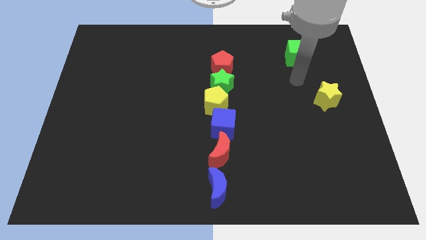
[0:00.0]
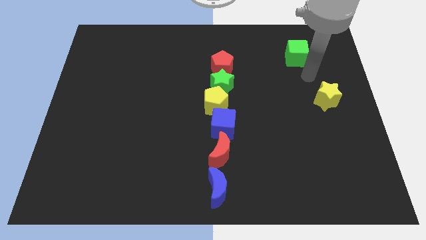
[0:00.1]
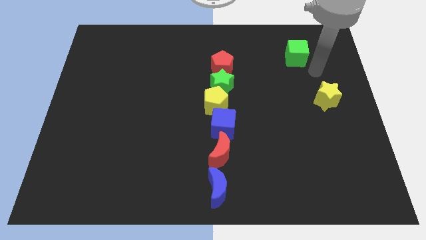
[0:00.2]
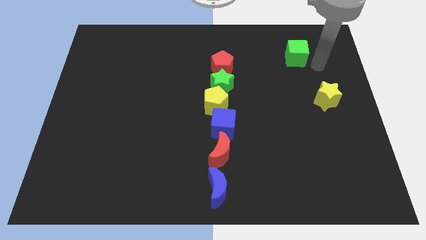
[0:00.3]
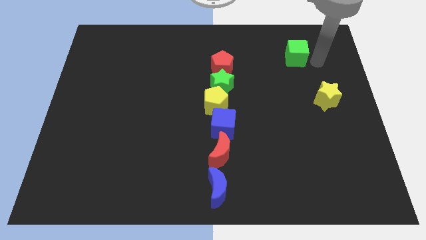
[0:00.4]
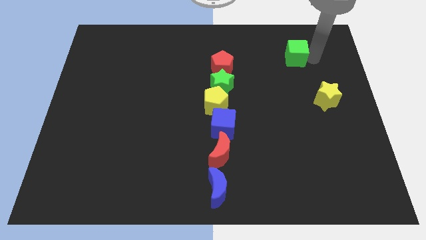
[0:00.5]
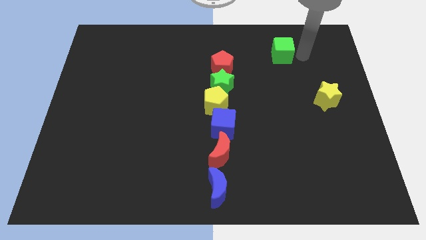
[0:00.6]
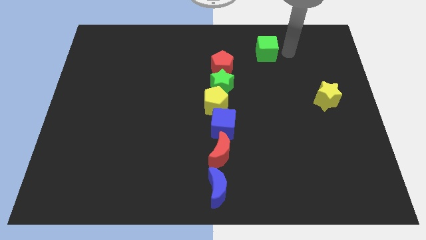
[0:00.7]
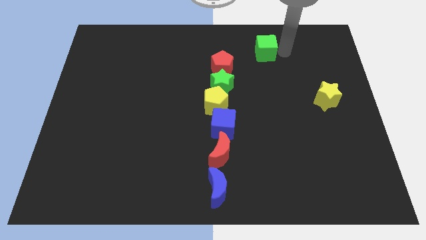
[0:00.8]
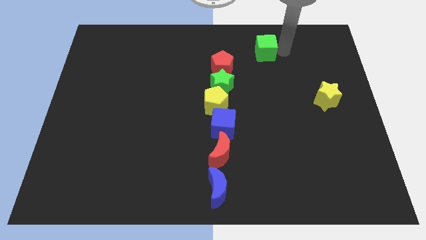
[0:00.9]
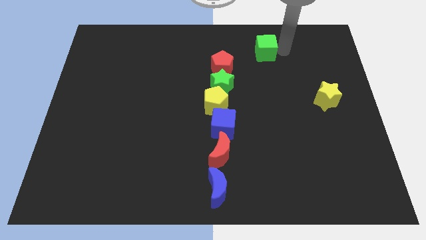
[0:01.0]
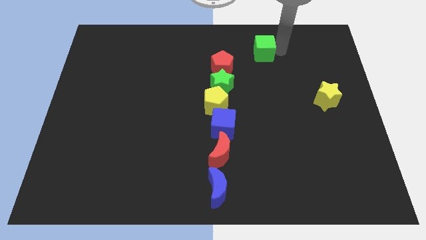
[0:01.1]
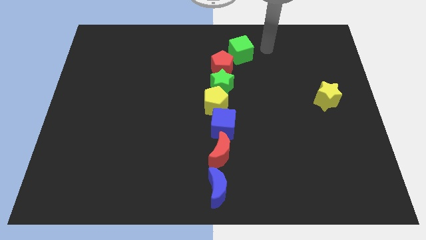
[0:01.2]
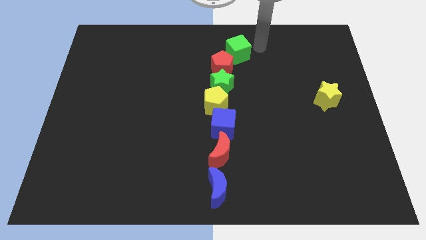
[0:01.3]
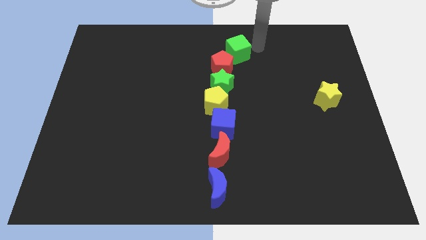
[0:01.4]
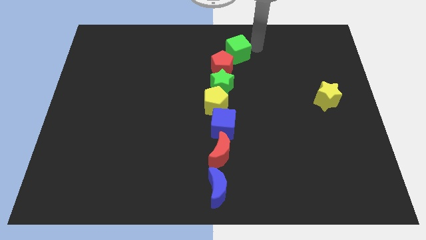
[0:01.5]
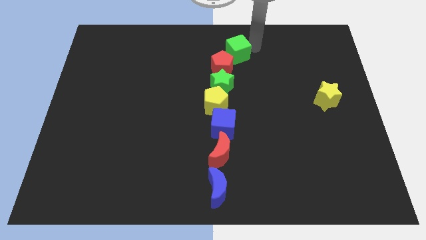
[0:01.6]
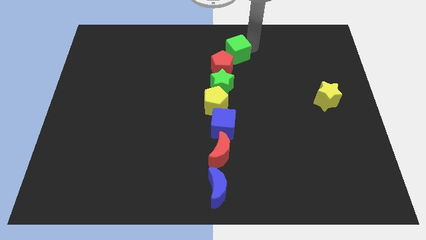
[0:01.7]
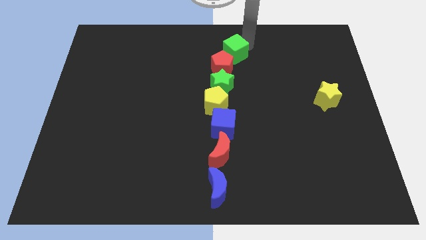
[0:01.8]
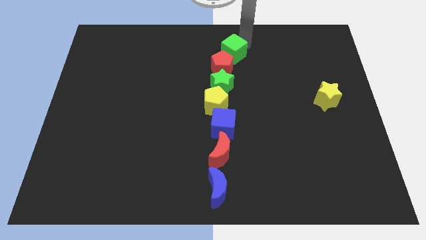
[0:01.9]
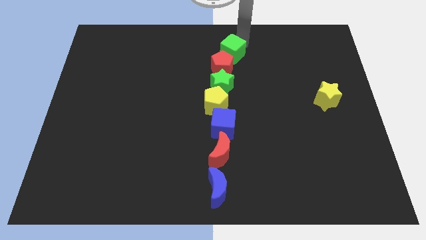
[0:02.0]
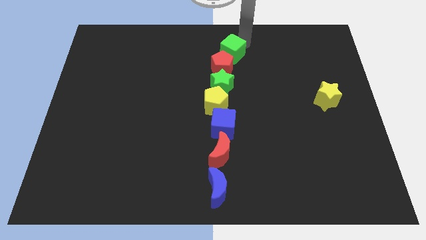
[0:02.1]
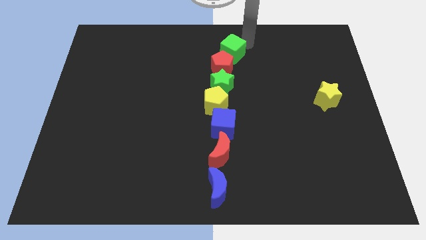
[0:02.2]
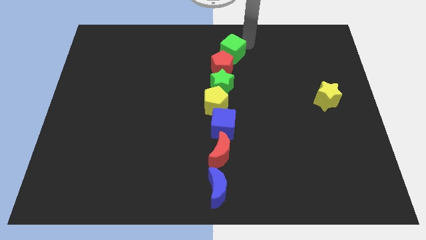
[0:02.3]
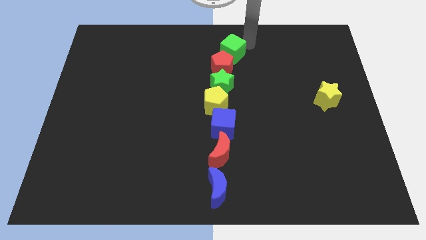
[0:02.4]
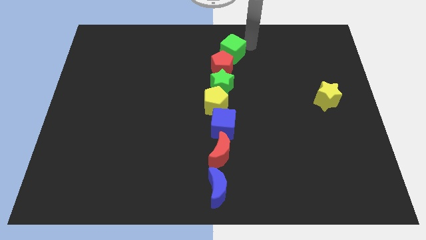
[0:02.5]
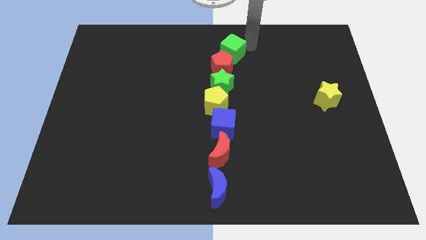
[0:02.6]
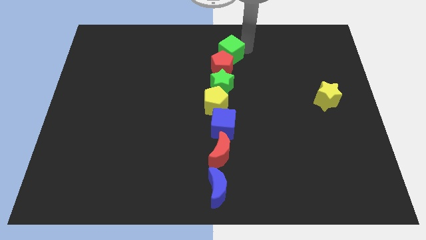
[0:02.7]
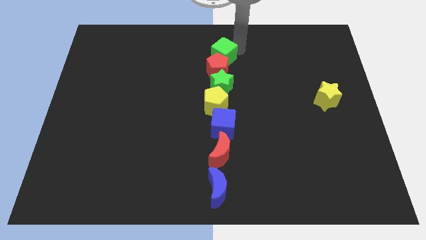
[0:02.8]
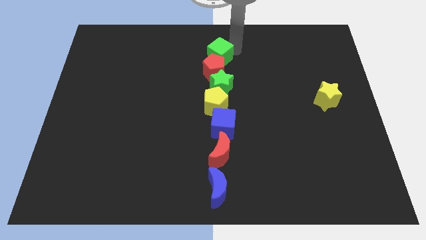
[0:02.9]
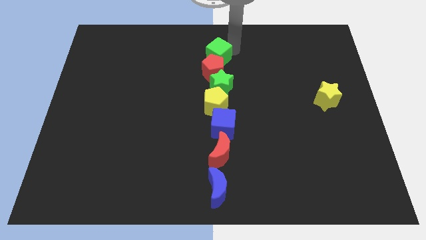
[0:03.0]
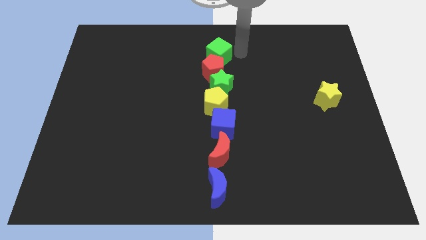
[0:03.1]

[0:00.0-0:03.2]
place the green cube at the top of red pentagon

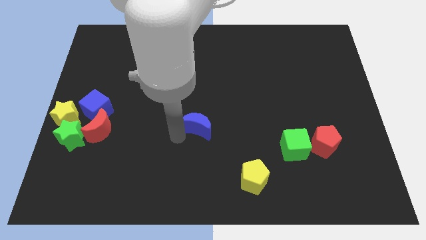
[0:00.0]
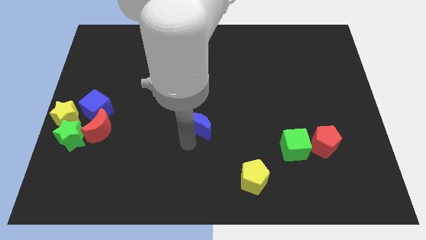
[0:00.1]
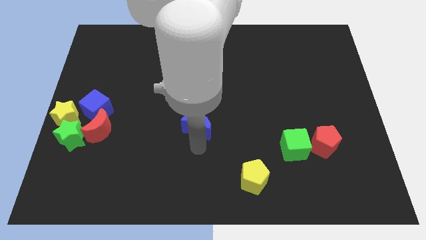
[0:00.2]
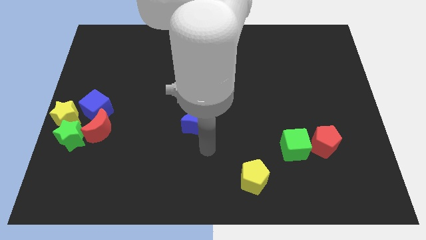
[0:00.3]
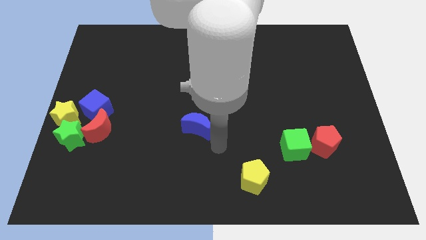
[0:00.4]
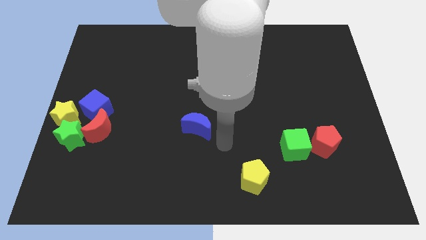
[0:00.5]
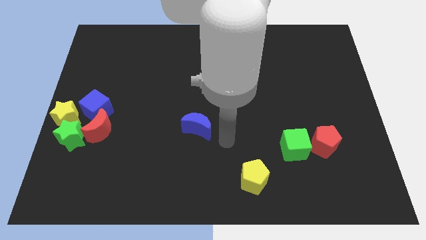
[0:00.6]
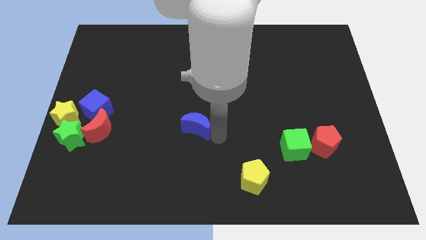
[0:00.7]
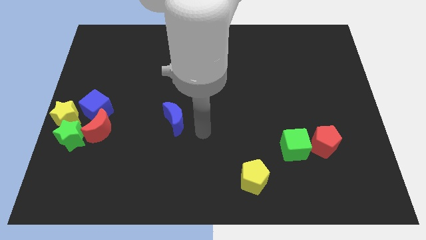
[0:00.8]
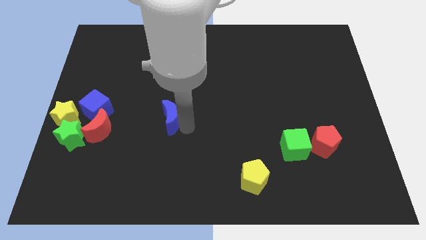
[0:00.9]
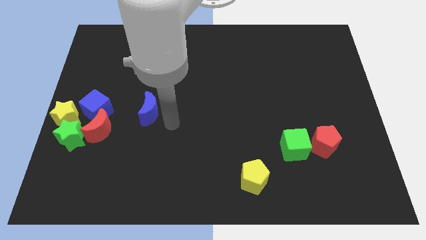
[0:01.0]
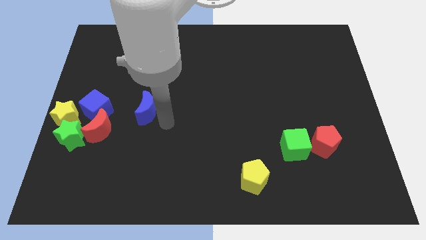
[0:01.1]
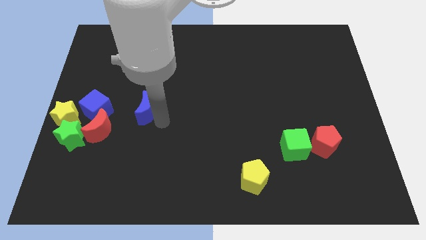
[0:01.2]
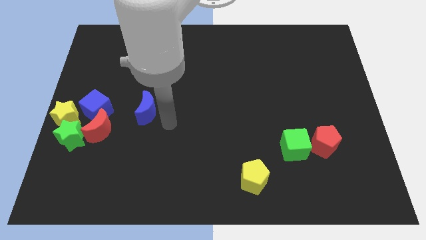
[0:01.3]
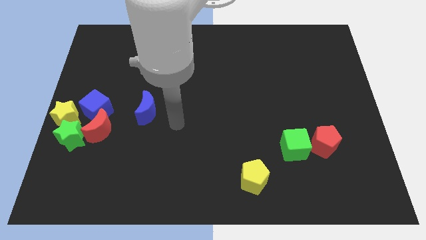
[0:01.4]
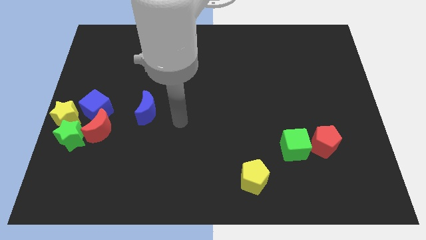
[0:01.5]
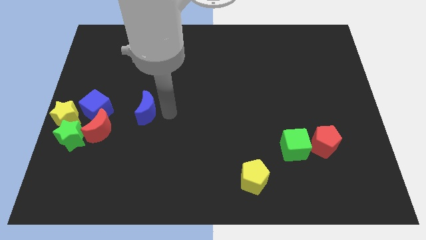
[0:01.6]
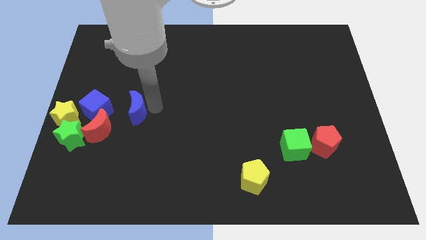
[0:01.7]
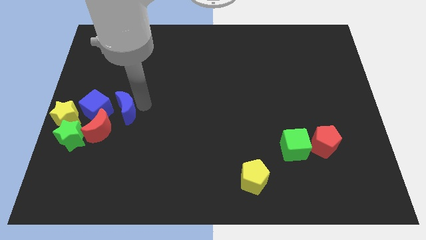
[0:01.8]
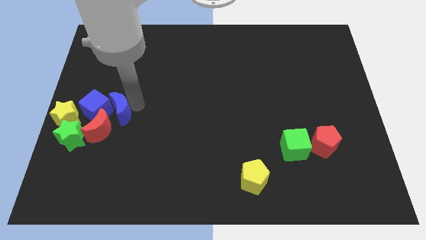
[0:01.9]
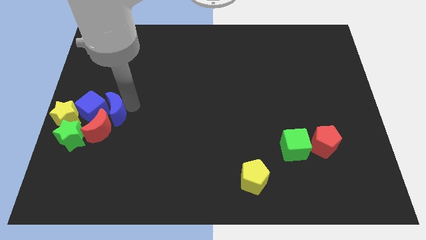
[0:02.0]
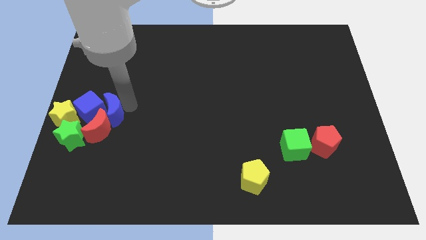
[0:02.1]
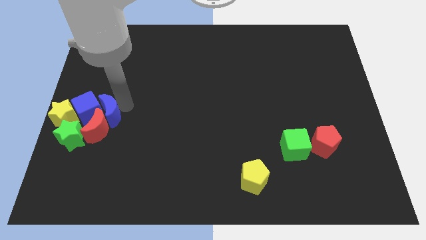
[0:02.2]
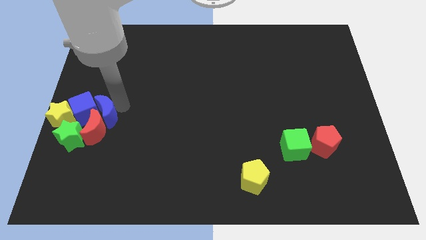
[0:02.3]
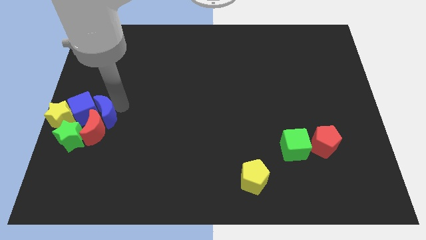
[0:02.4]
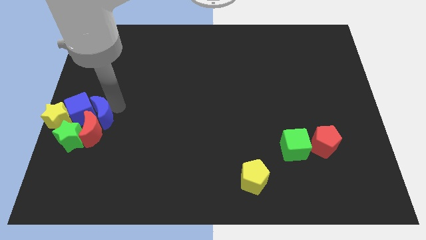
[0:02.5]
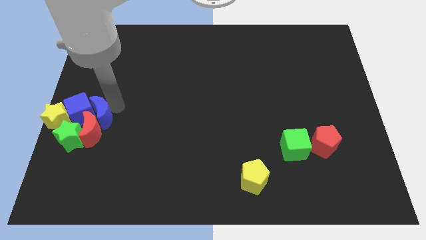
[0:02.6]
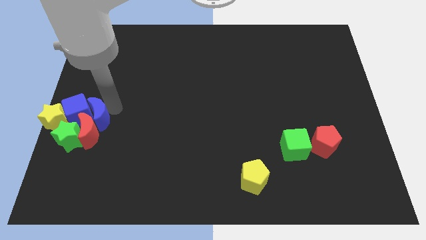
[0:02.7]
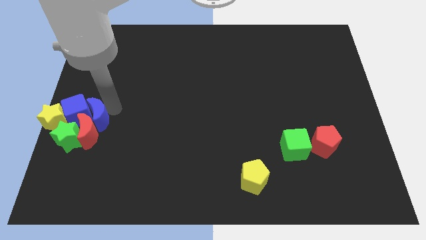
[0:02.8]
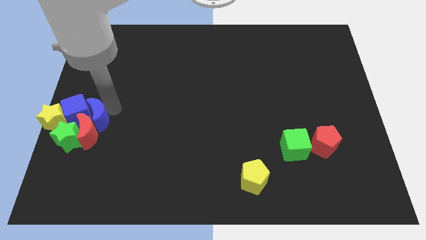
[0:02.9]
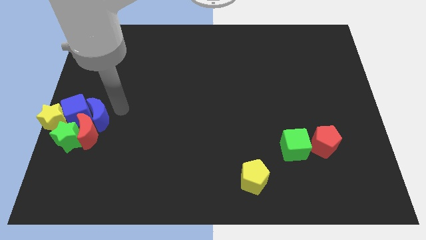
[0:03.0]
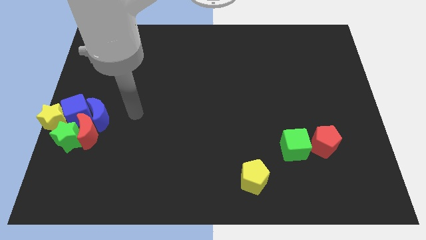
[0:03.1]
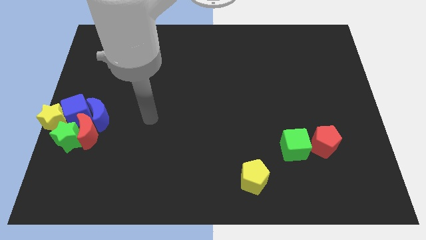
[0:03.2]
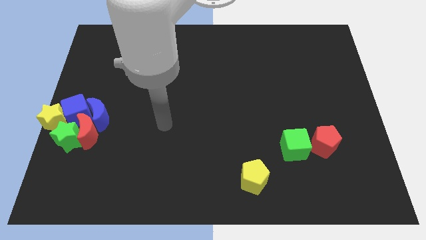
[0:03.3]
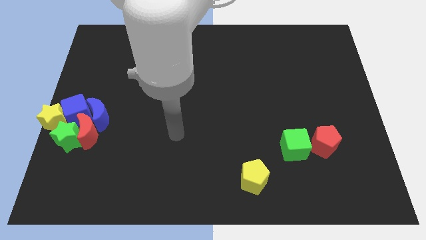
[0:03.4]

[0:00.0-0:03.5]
push blue moon in to blue cube

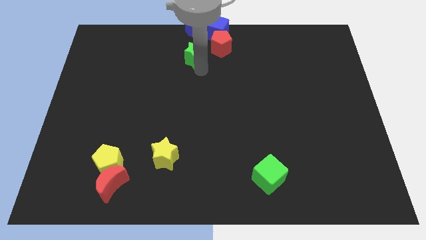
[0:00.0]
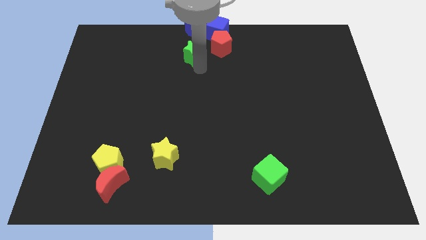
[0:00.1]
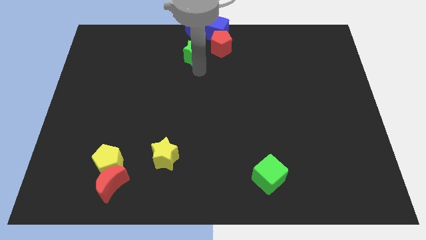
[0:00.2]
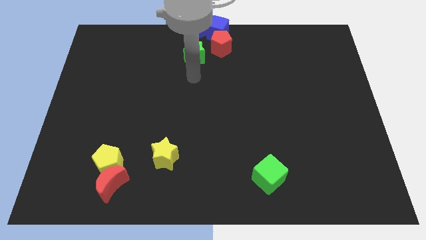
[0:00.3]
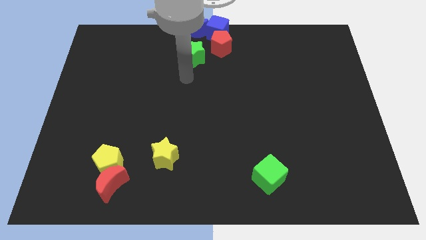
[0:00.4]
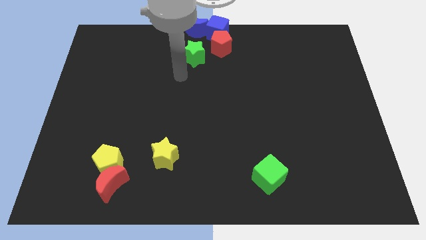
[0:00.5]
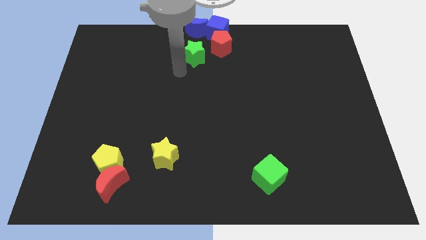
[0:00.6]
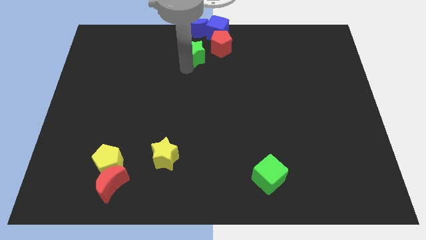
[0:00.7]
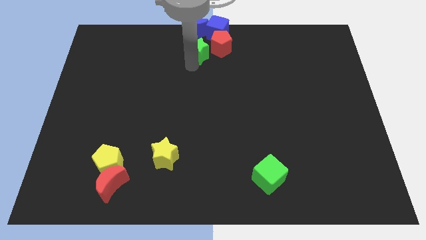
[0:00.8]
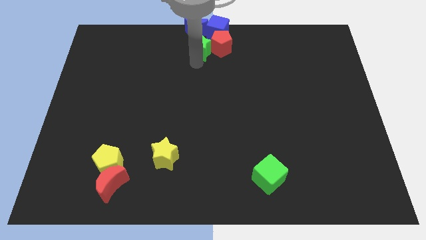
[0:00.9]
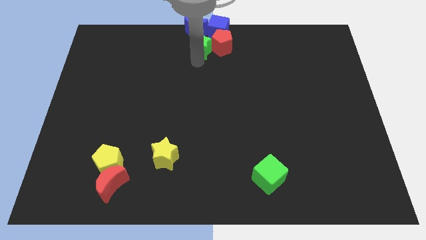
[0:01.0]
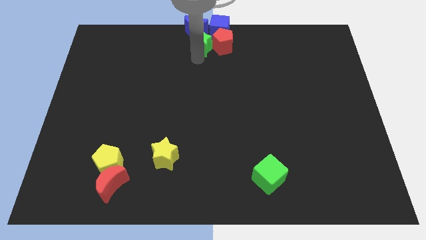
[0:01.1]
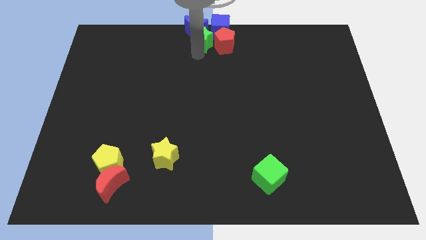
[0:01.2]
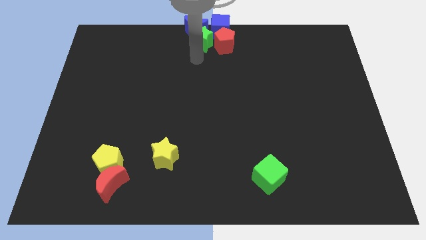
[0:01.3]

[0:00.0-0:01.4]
put the green star left to the red pentagon

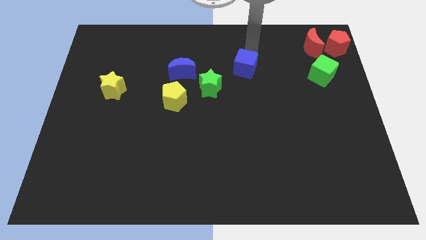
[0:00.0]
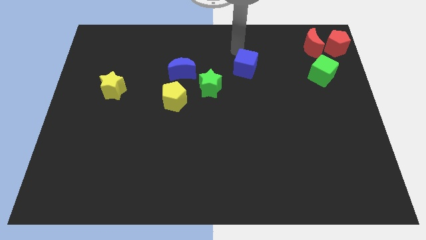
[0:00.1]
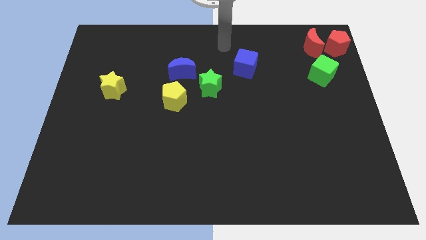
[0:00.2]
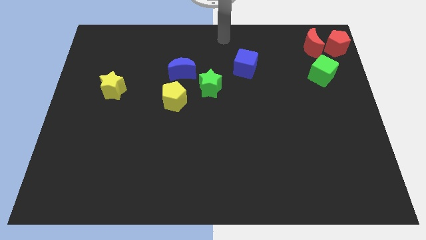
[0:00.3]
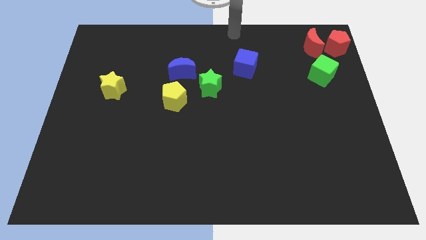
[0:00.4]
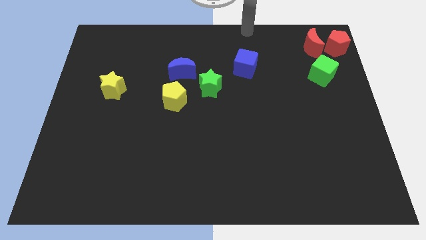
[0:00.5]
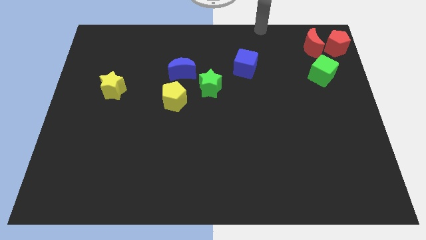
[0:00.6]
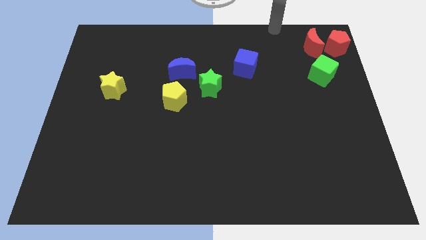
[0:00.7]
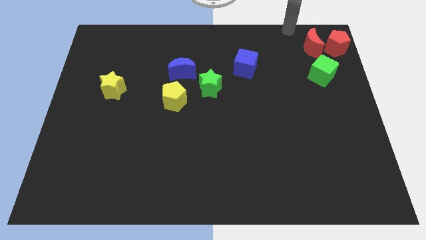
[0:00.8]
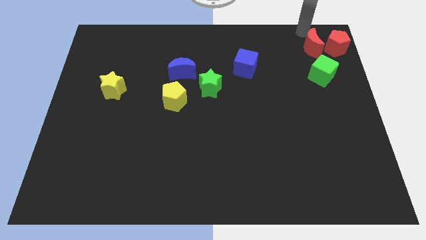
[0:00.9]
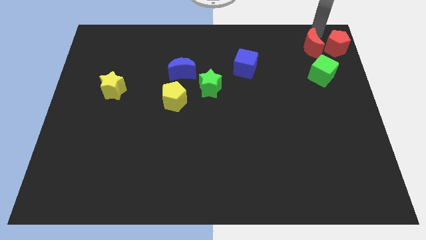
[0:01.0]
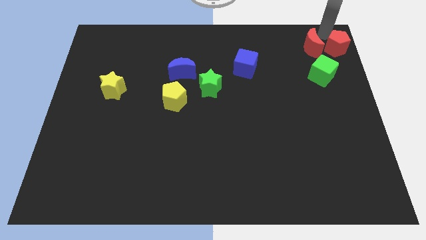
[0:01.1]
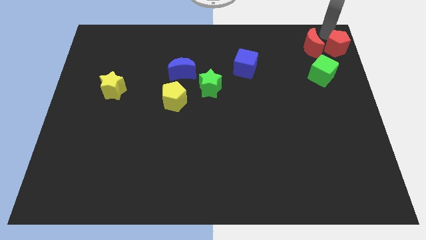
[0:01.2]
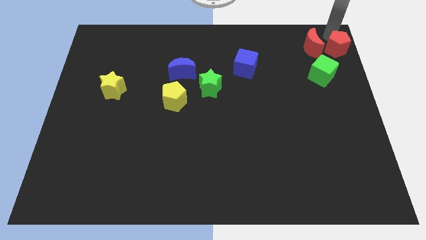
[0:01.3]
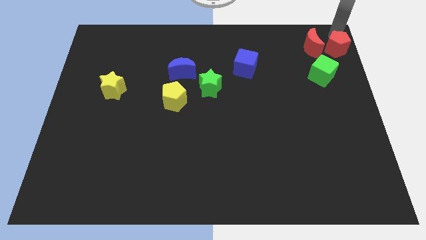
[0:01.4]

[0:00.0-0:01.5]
point your arm above red pentagon
